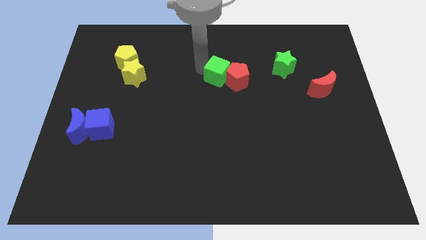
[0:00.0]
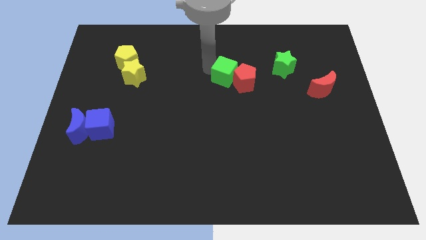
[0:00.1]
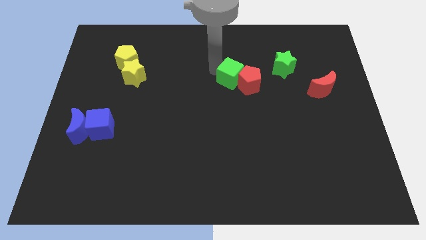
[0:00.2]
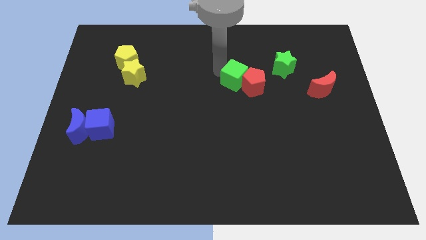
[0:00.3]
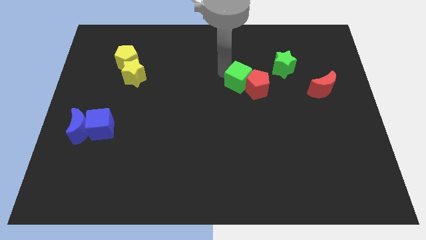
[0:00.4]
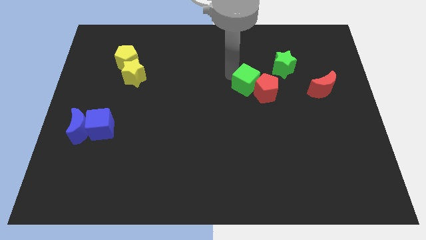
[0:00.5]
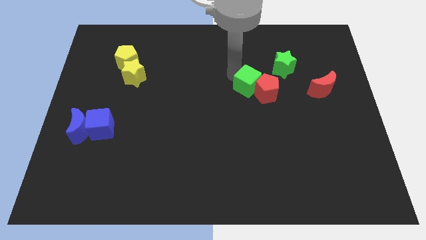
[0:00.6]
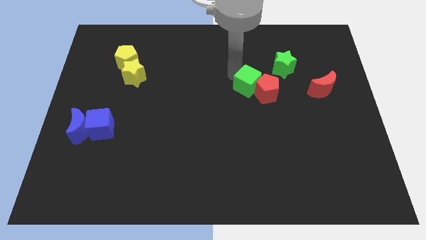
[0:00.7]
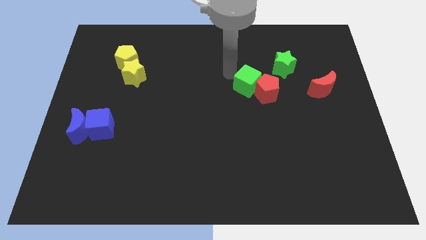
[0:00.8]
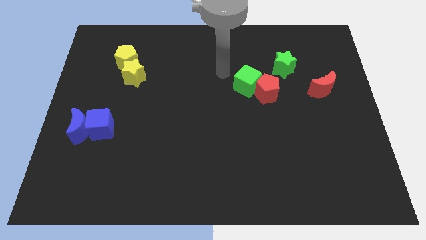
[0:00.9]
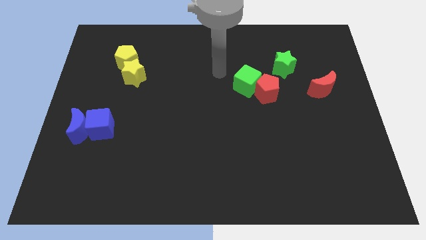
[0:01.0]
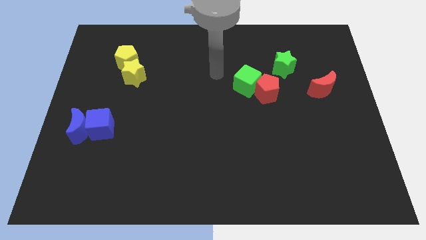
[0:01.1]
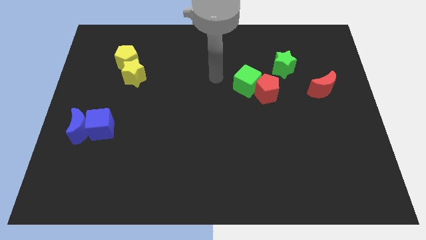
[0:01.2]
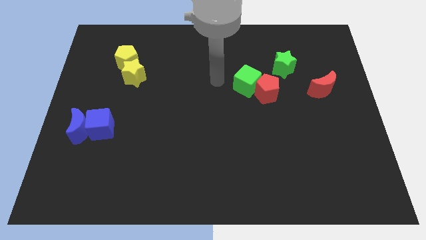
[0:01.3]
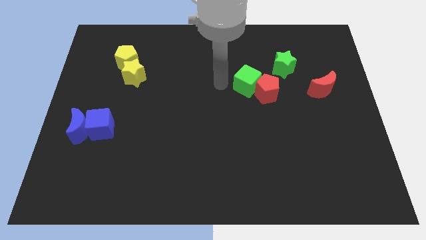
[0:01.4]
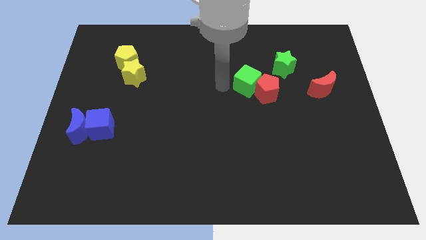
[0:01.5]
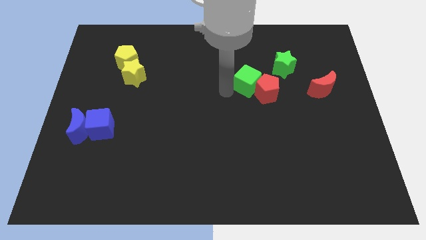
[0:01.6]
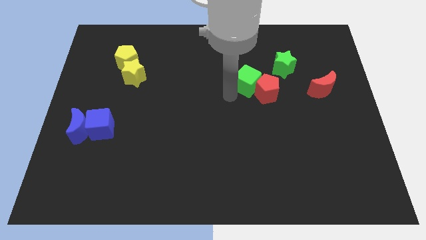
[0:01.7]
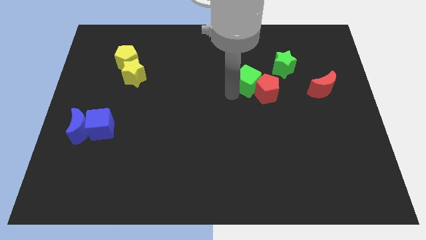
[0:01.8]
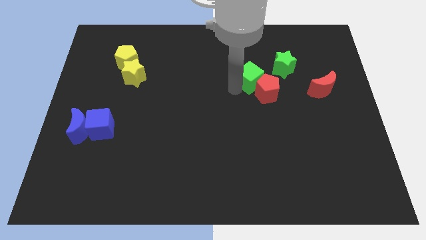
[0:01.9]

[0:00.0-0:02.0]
move red pentagon and green cube to the green star

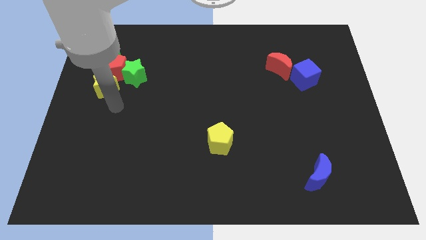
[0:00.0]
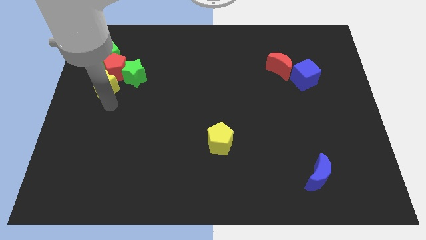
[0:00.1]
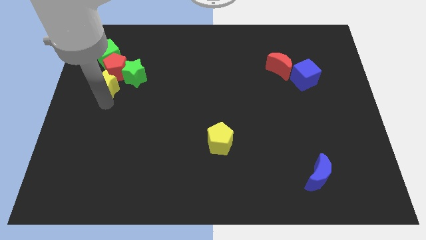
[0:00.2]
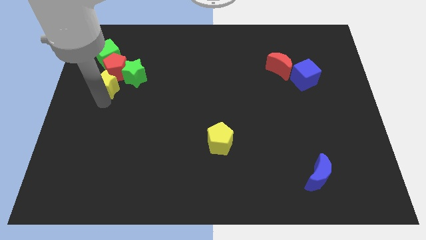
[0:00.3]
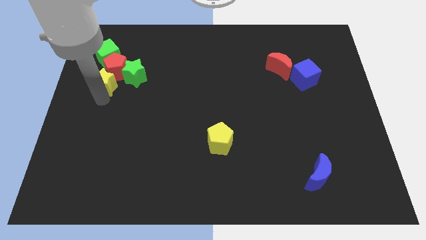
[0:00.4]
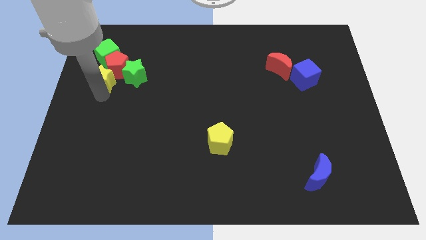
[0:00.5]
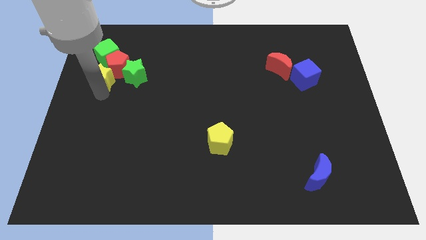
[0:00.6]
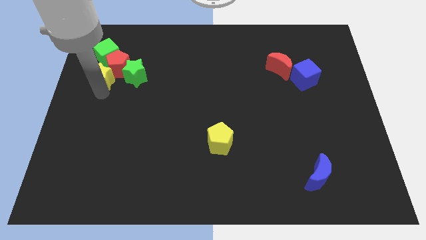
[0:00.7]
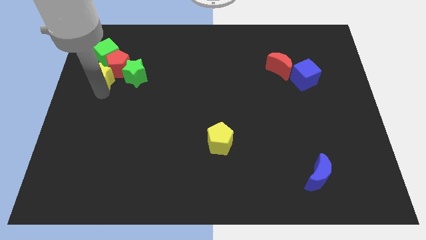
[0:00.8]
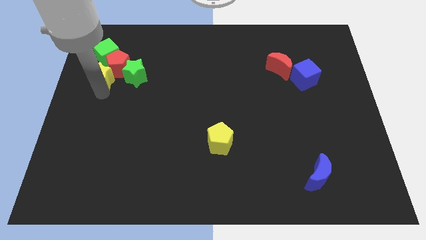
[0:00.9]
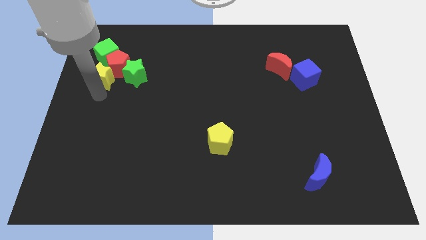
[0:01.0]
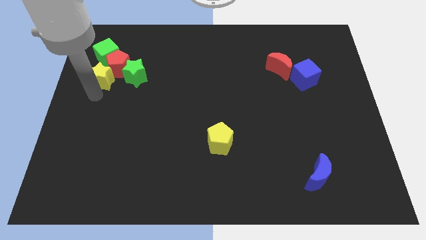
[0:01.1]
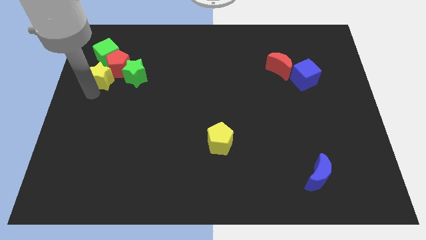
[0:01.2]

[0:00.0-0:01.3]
move yellow star into red pentagon

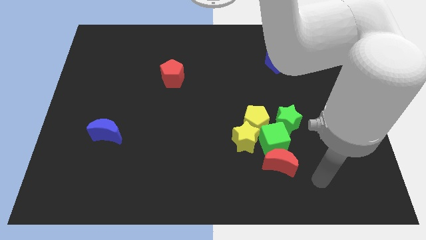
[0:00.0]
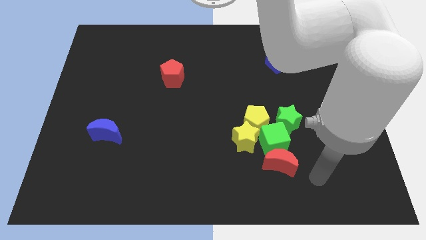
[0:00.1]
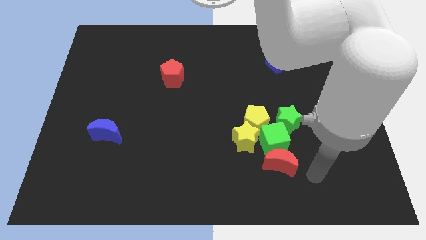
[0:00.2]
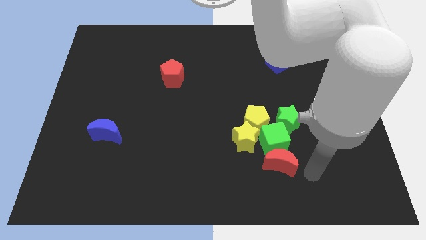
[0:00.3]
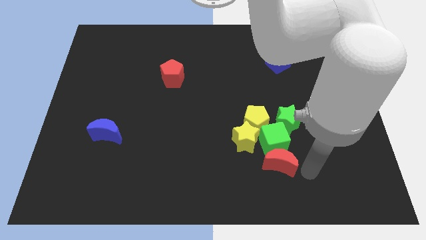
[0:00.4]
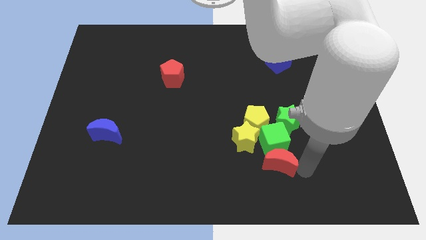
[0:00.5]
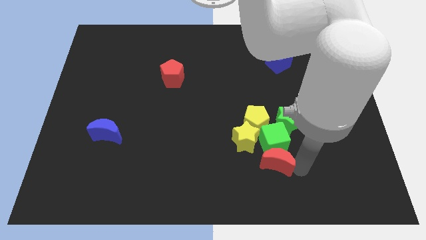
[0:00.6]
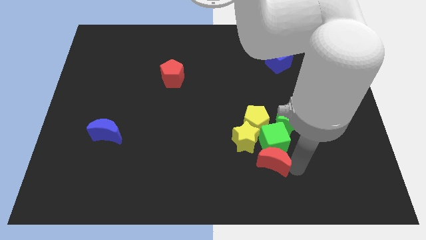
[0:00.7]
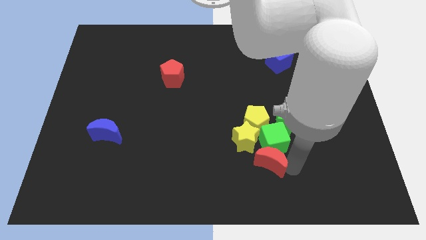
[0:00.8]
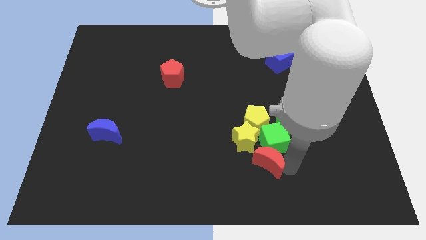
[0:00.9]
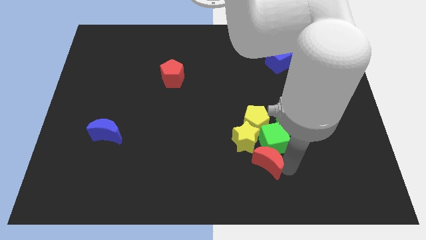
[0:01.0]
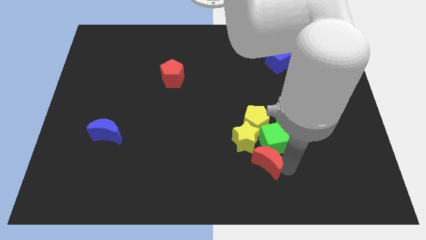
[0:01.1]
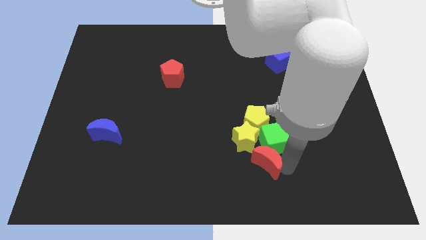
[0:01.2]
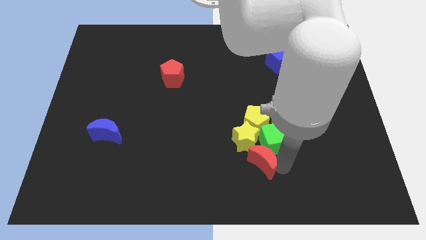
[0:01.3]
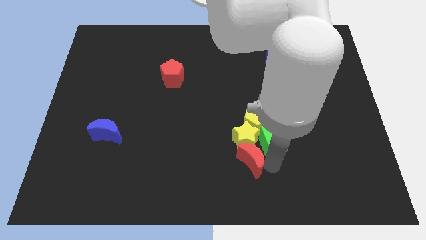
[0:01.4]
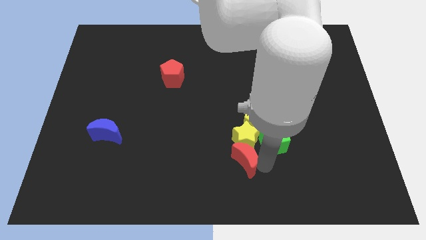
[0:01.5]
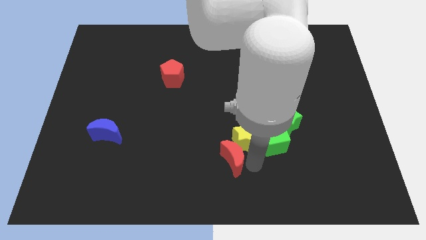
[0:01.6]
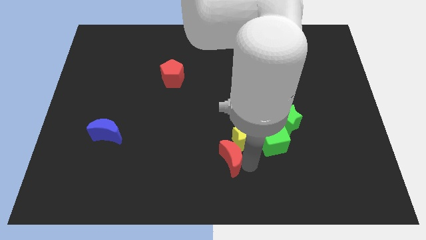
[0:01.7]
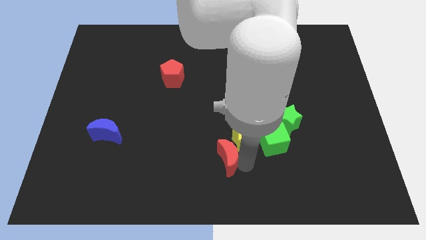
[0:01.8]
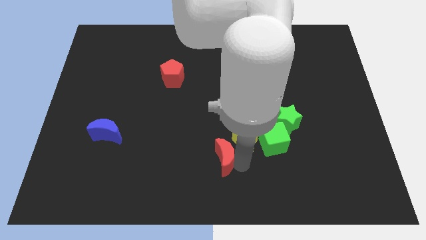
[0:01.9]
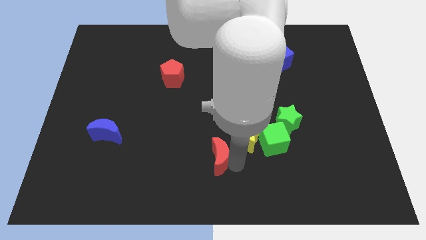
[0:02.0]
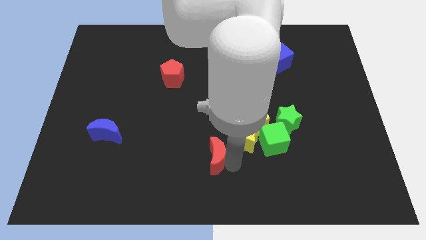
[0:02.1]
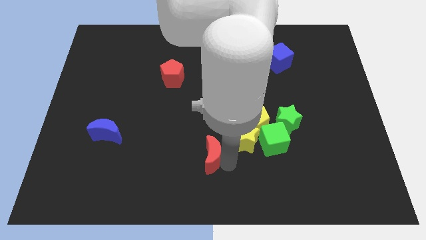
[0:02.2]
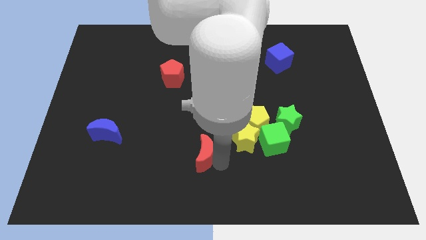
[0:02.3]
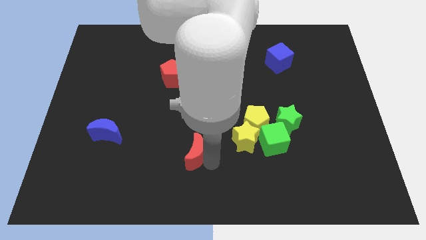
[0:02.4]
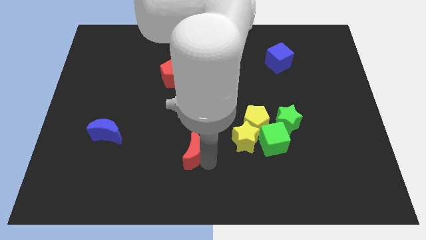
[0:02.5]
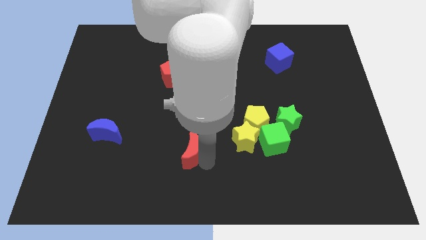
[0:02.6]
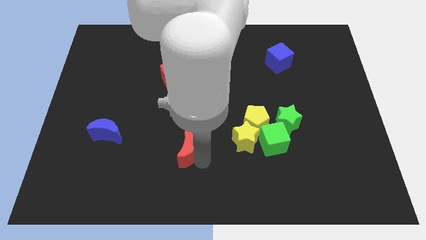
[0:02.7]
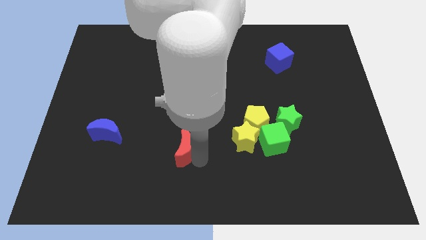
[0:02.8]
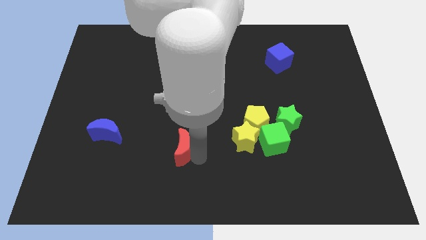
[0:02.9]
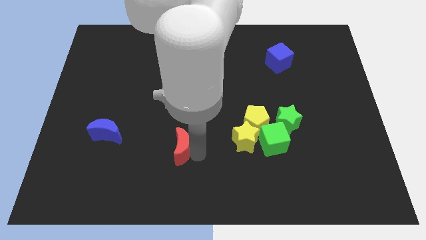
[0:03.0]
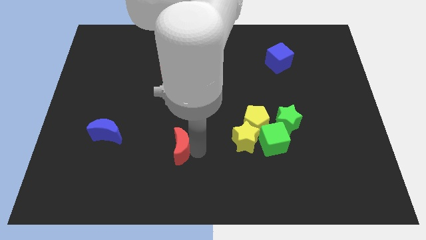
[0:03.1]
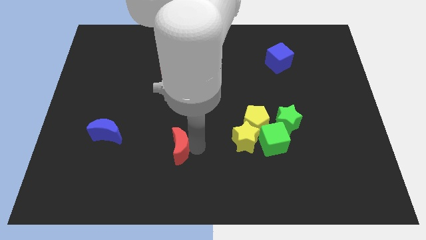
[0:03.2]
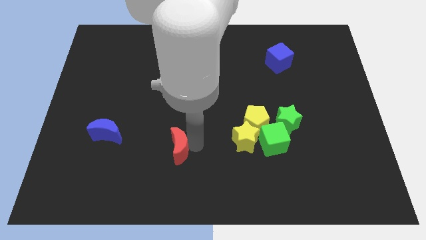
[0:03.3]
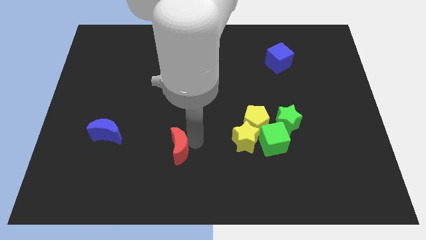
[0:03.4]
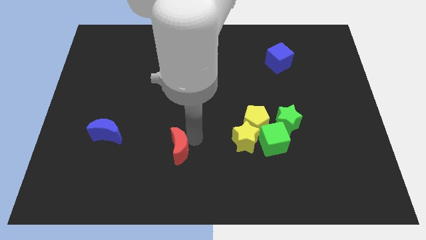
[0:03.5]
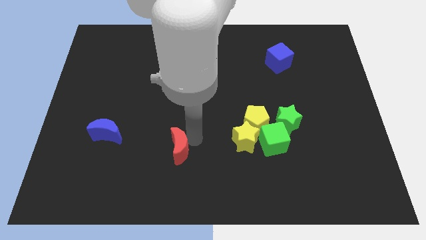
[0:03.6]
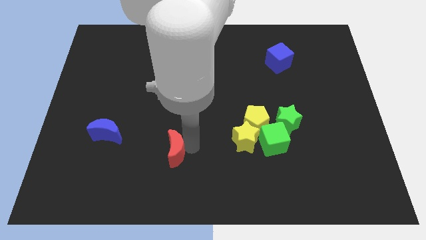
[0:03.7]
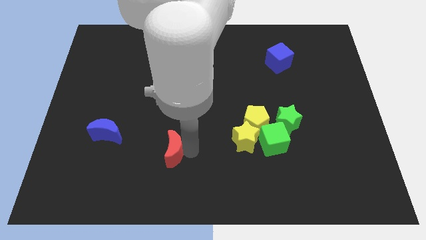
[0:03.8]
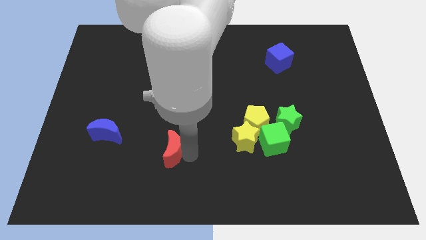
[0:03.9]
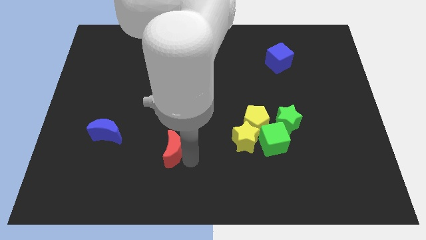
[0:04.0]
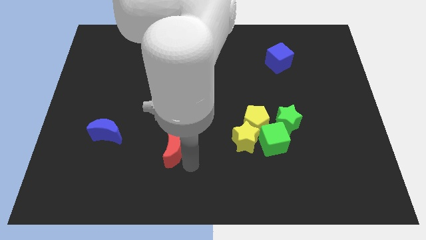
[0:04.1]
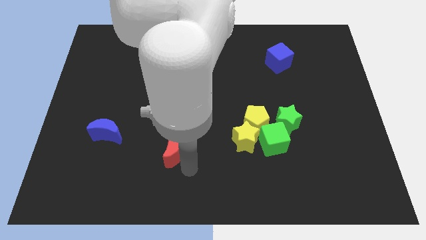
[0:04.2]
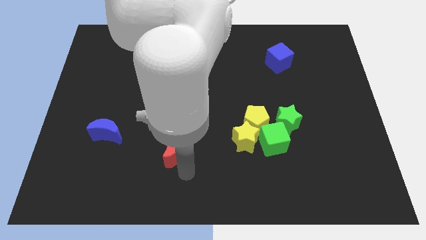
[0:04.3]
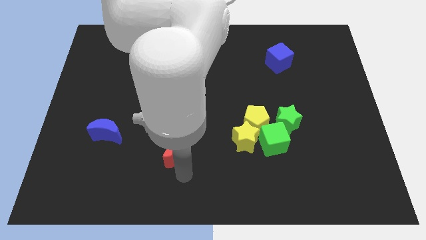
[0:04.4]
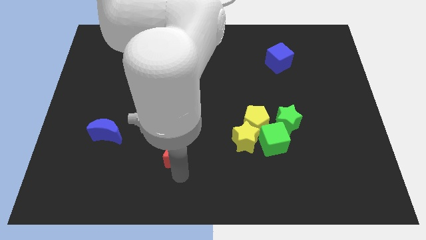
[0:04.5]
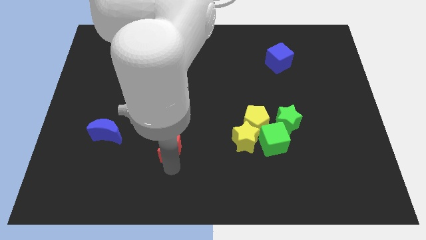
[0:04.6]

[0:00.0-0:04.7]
move the red moon diagonally bottom right to the blue moon

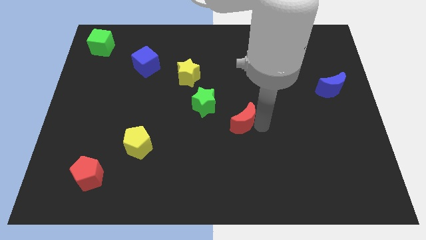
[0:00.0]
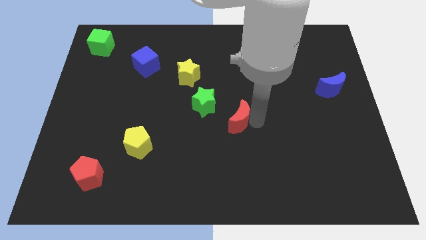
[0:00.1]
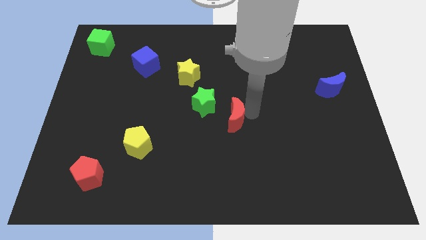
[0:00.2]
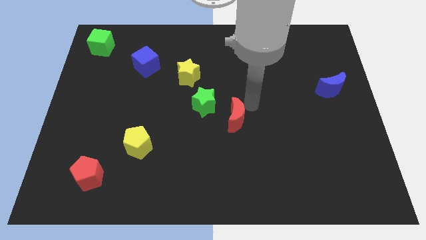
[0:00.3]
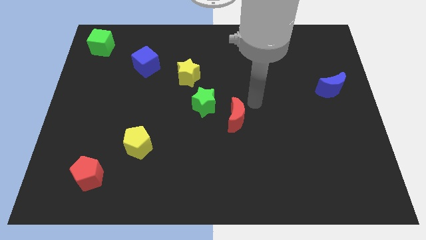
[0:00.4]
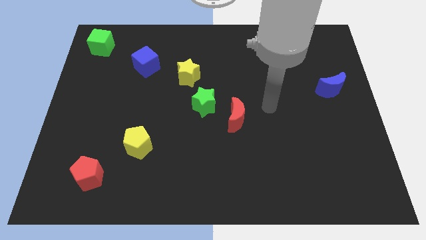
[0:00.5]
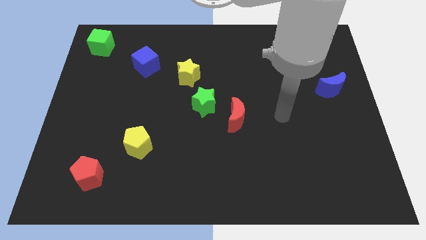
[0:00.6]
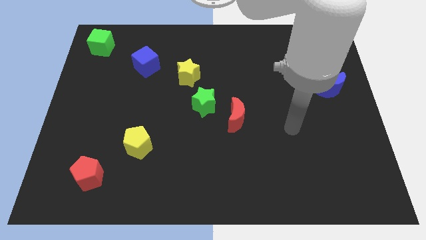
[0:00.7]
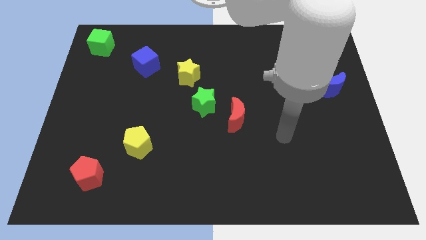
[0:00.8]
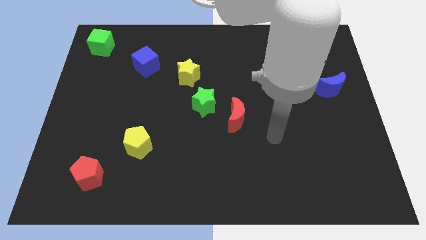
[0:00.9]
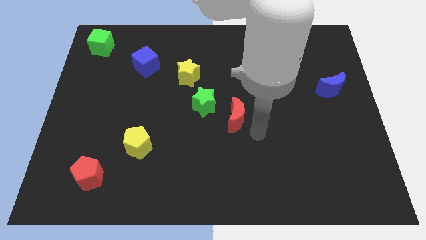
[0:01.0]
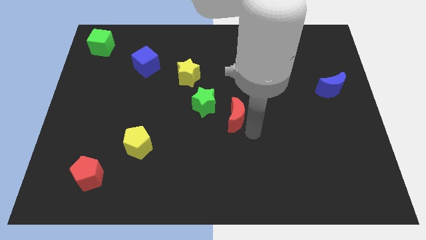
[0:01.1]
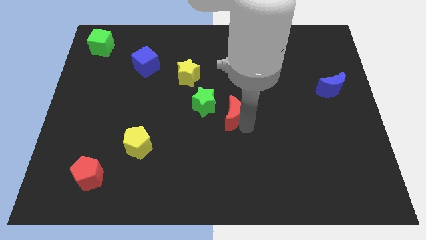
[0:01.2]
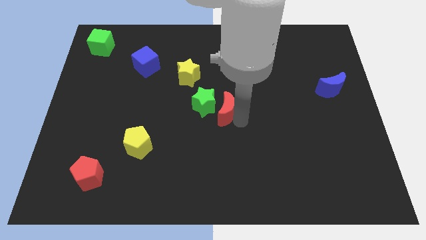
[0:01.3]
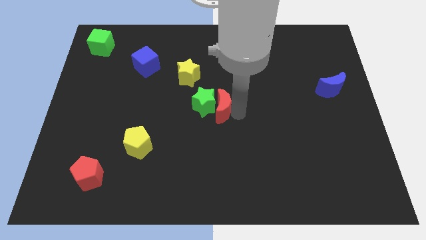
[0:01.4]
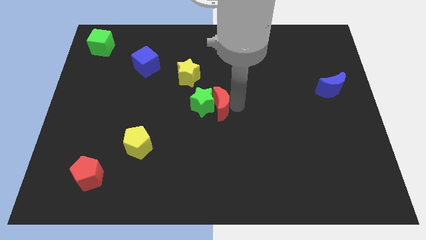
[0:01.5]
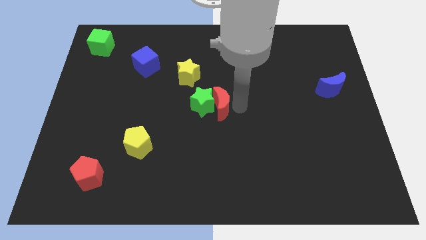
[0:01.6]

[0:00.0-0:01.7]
push the red crescent to the right of the green star
